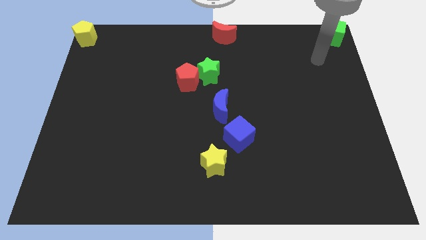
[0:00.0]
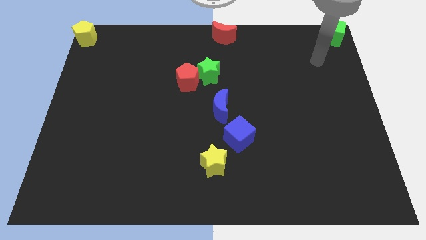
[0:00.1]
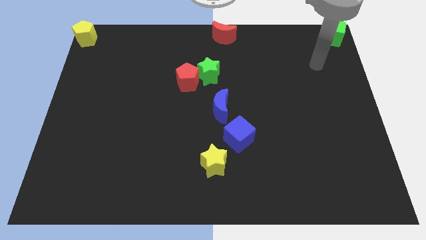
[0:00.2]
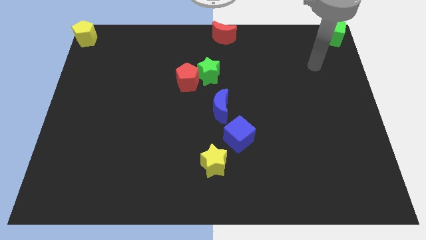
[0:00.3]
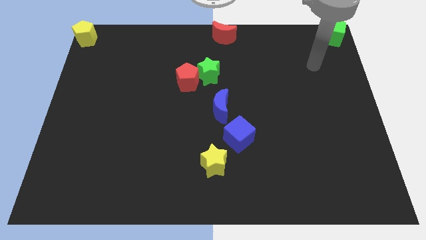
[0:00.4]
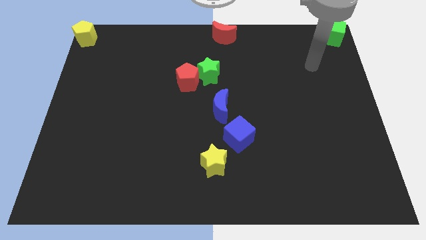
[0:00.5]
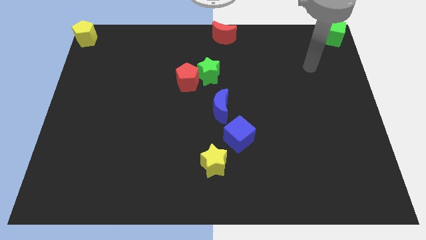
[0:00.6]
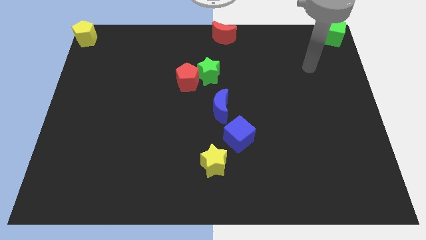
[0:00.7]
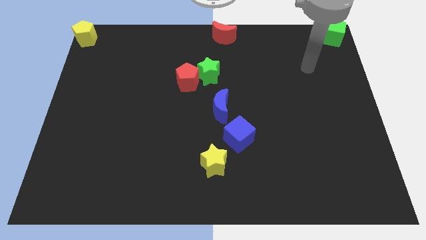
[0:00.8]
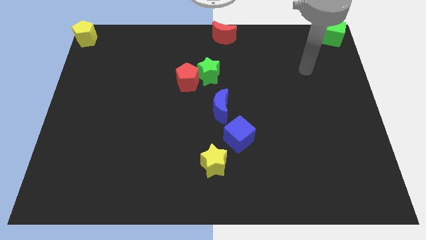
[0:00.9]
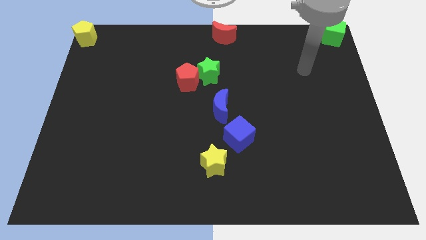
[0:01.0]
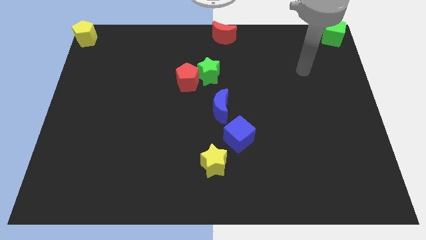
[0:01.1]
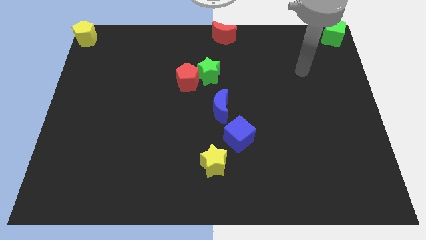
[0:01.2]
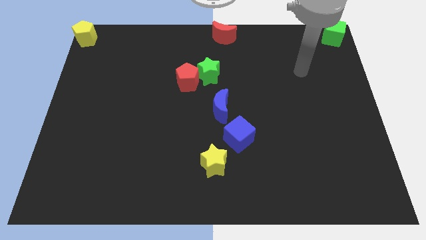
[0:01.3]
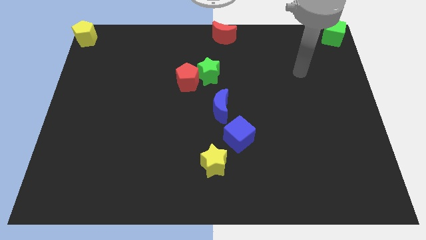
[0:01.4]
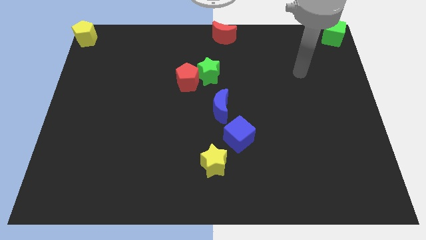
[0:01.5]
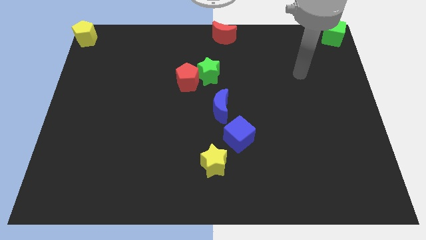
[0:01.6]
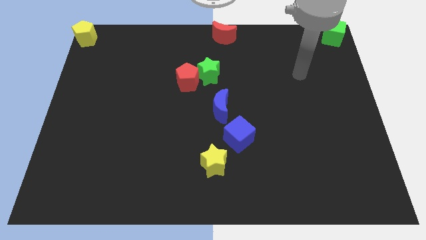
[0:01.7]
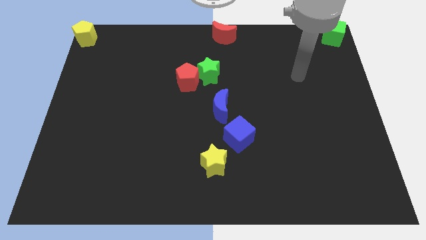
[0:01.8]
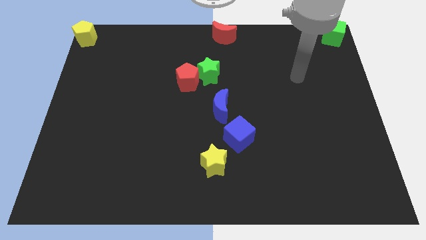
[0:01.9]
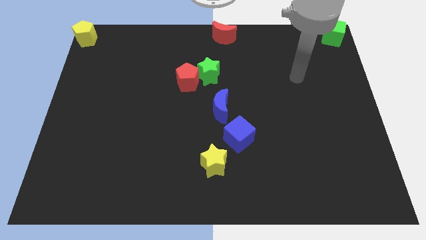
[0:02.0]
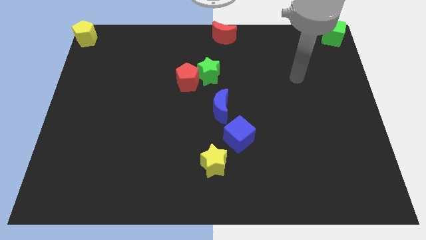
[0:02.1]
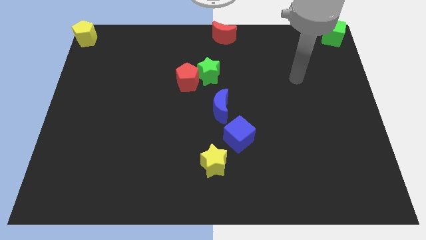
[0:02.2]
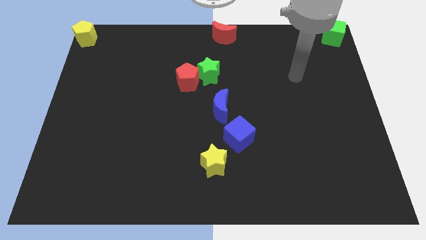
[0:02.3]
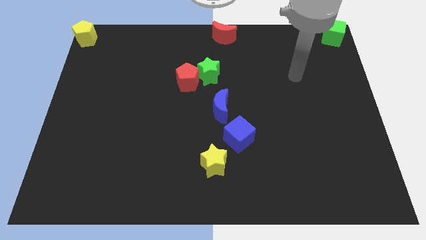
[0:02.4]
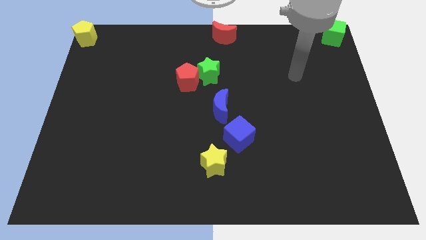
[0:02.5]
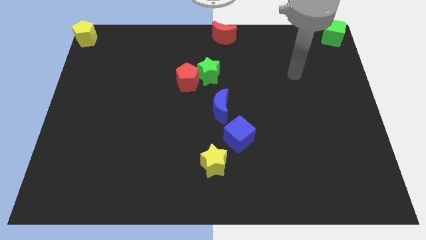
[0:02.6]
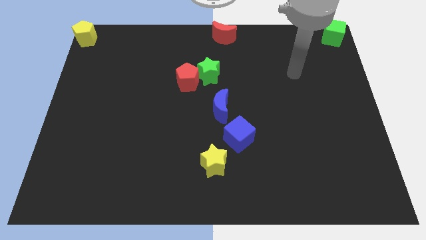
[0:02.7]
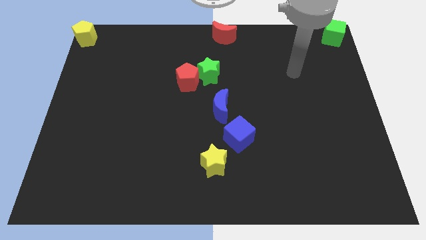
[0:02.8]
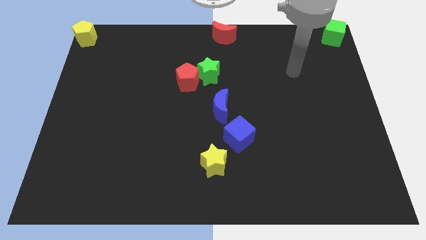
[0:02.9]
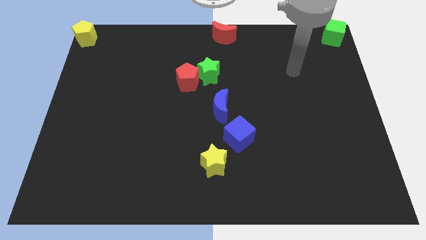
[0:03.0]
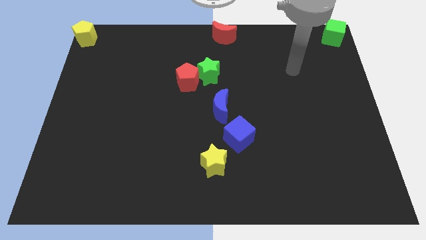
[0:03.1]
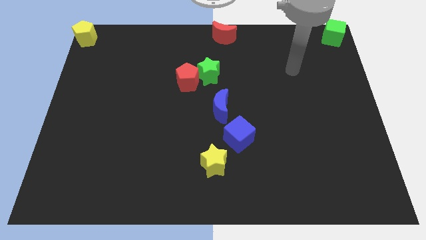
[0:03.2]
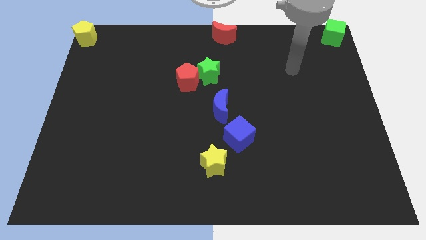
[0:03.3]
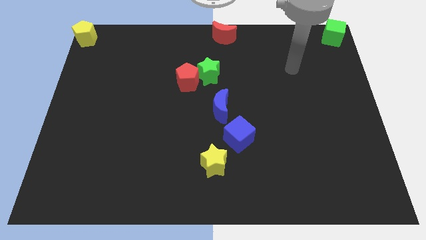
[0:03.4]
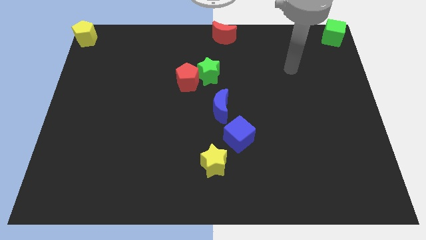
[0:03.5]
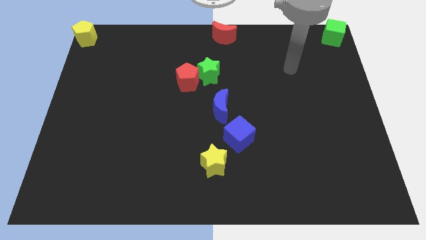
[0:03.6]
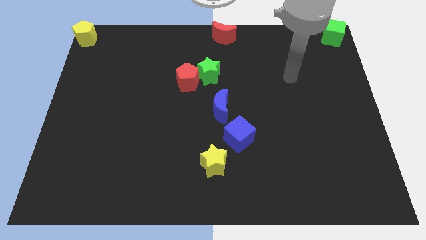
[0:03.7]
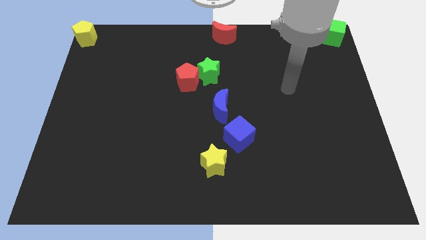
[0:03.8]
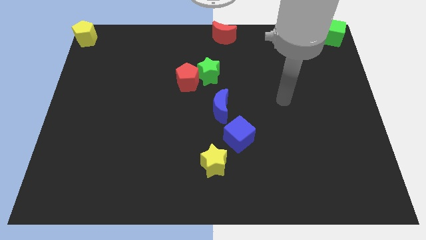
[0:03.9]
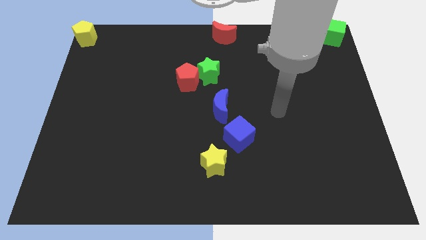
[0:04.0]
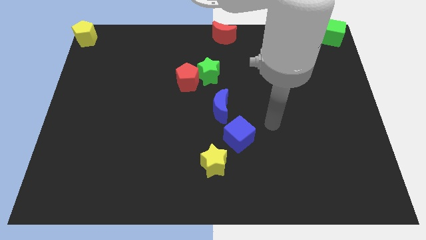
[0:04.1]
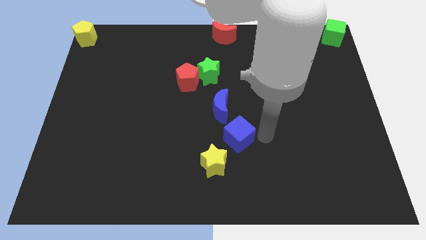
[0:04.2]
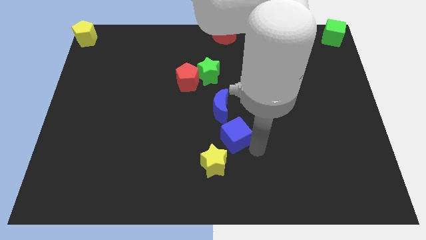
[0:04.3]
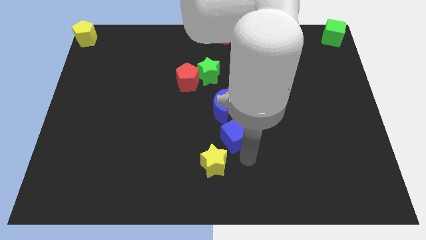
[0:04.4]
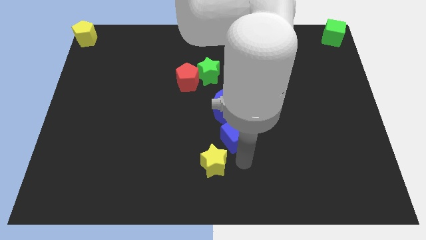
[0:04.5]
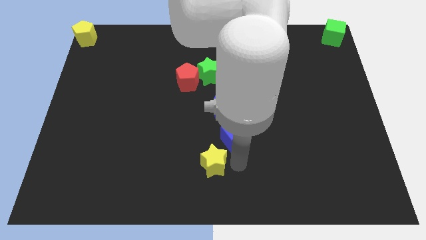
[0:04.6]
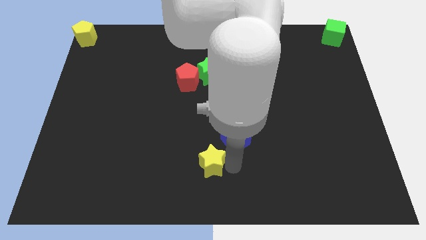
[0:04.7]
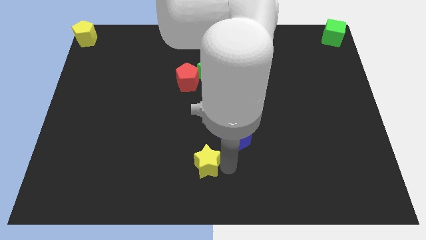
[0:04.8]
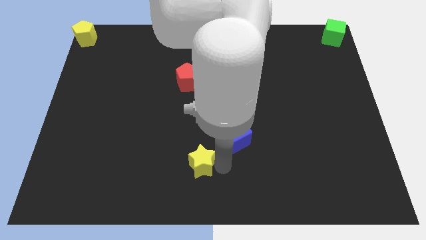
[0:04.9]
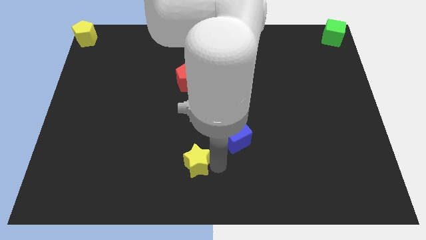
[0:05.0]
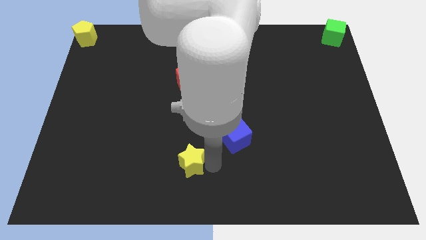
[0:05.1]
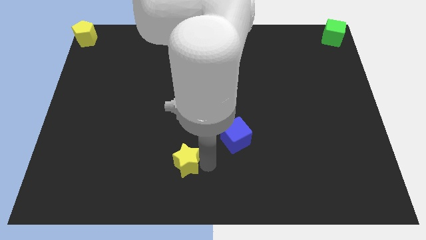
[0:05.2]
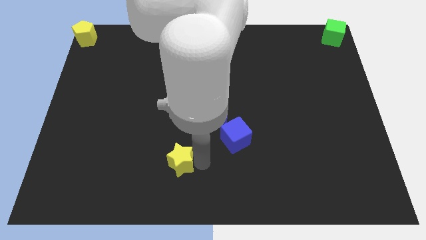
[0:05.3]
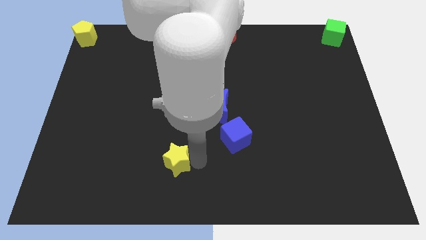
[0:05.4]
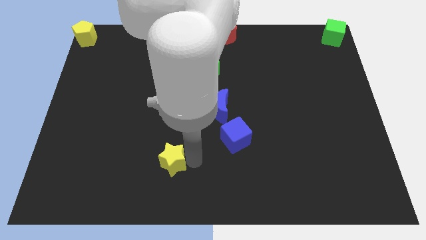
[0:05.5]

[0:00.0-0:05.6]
push the yellow star diagonal to yellow pentagon

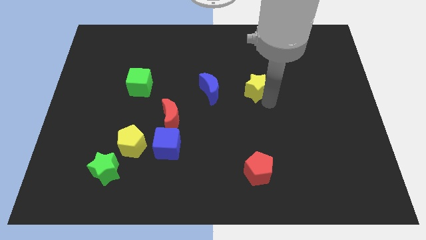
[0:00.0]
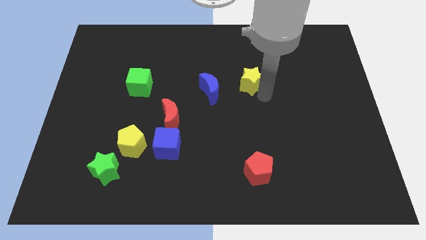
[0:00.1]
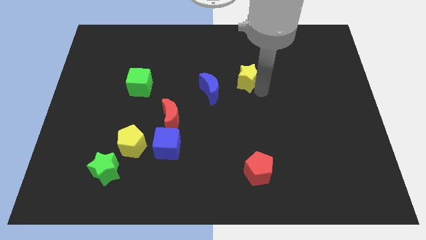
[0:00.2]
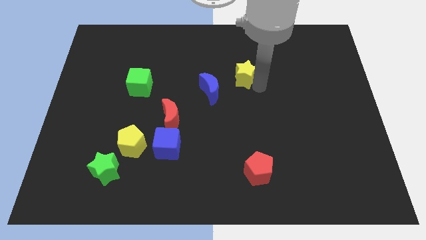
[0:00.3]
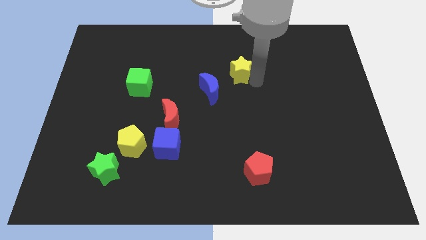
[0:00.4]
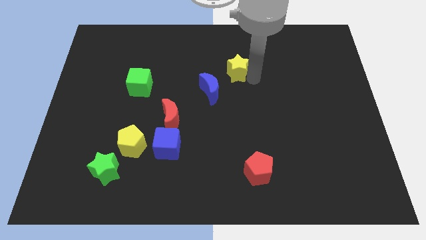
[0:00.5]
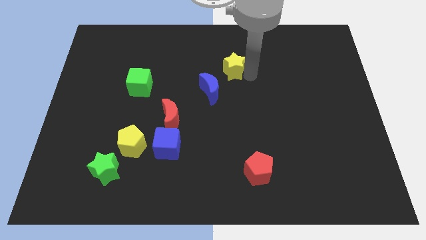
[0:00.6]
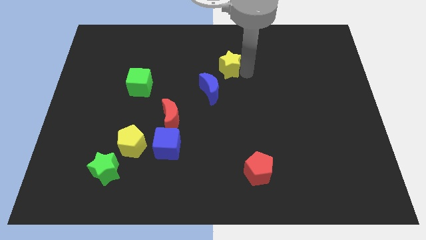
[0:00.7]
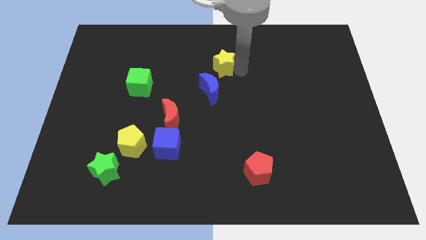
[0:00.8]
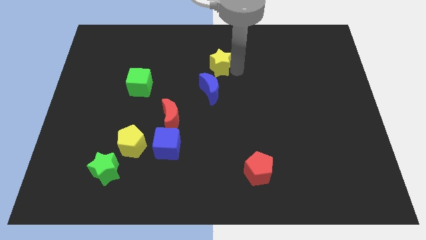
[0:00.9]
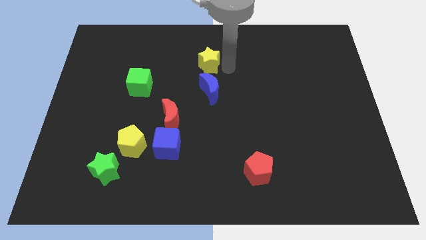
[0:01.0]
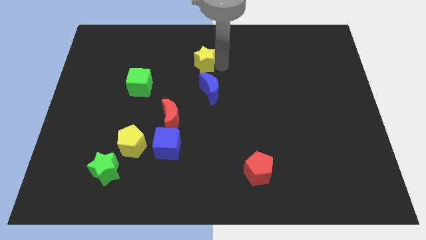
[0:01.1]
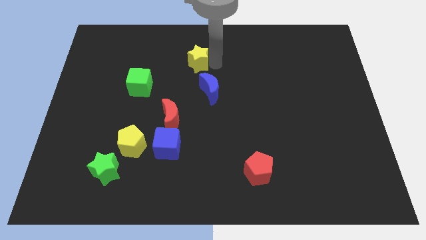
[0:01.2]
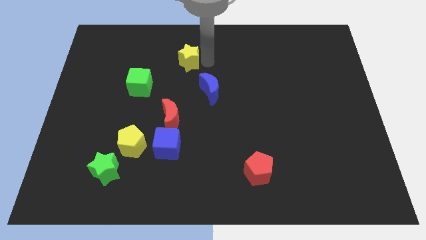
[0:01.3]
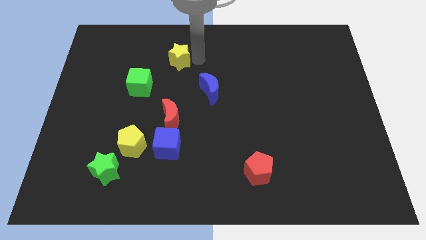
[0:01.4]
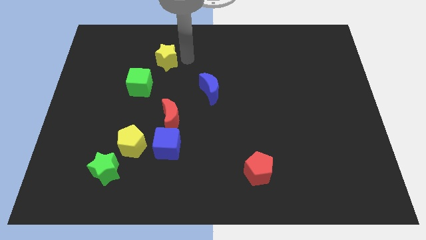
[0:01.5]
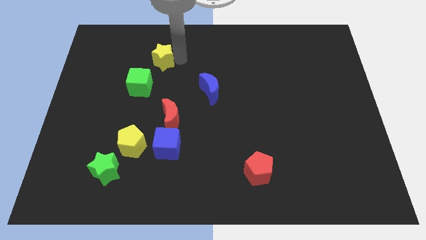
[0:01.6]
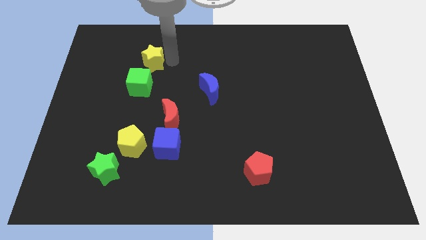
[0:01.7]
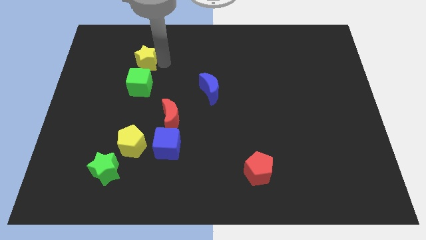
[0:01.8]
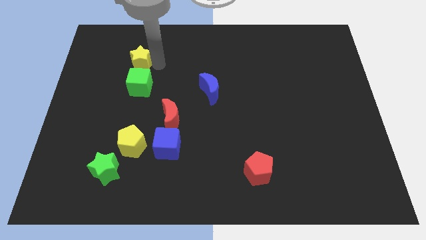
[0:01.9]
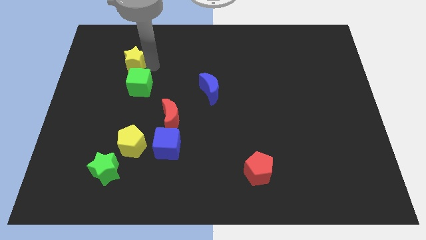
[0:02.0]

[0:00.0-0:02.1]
slide the yellow star to the top of the green cube

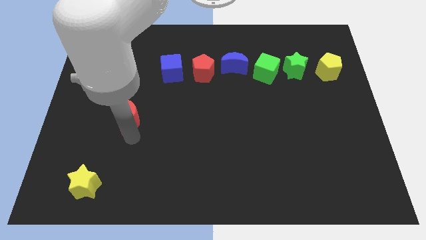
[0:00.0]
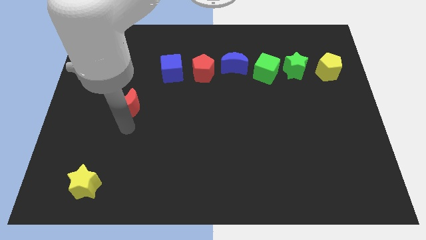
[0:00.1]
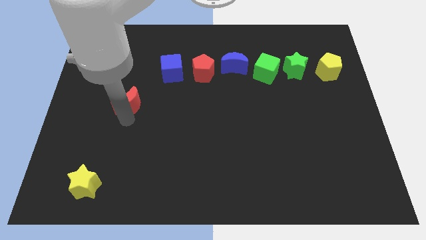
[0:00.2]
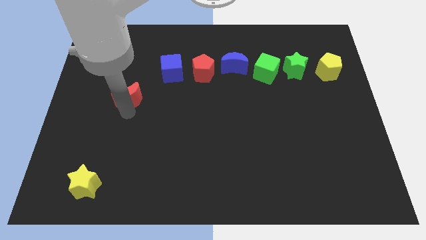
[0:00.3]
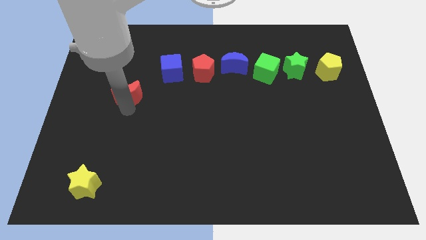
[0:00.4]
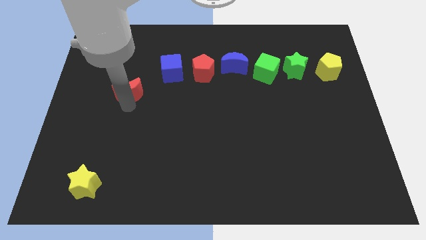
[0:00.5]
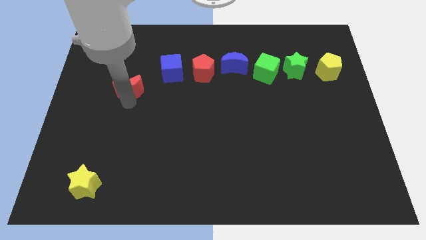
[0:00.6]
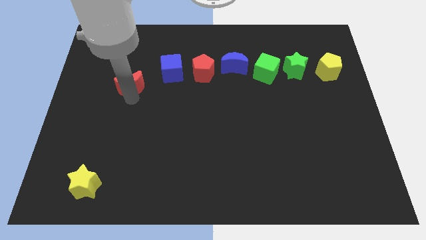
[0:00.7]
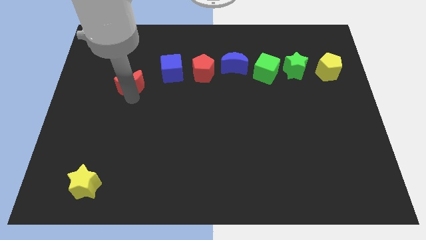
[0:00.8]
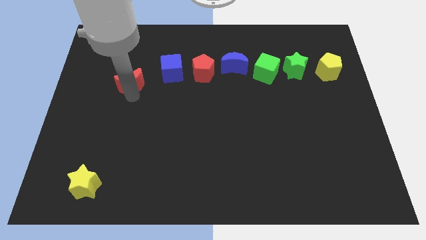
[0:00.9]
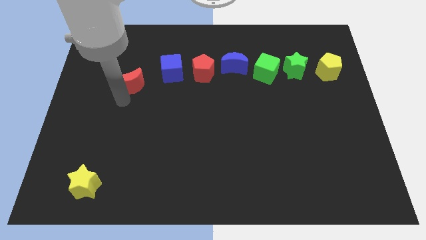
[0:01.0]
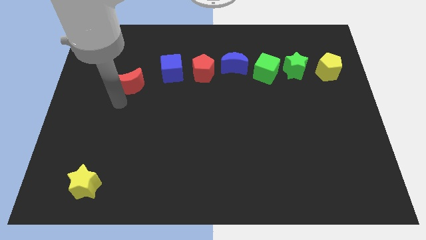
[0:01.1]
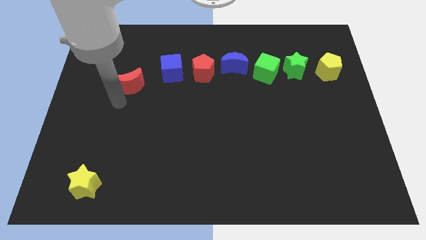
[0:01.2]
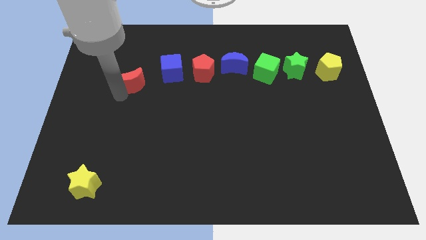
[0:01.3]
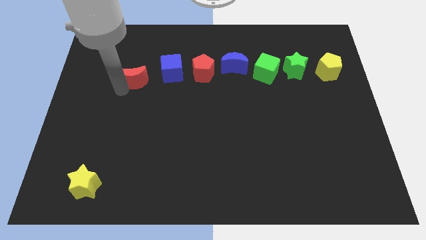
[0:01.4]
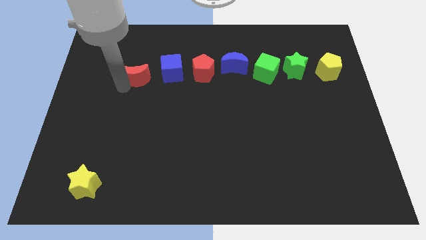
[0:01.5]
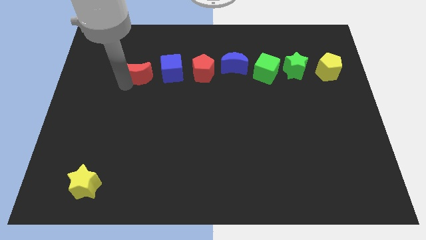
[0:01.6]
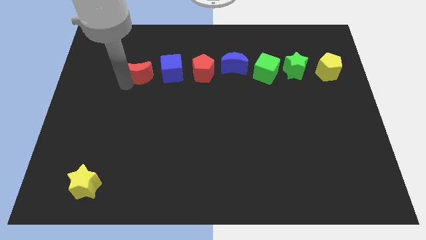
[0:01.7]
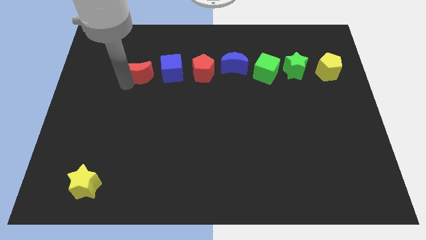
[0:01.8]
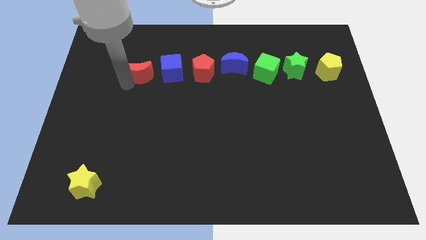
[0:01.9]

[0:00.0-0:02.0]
push the red crescent to the left of blue cube
